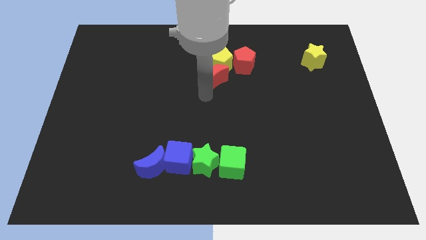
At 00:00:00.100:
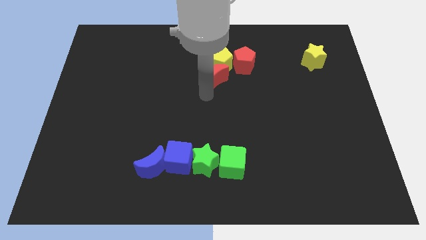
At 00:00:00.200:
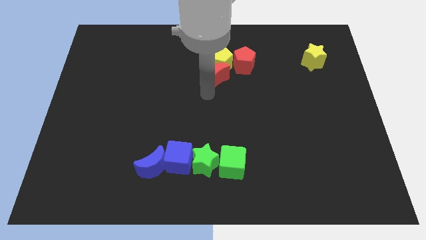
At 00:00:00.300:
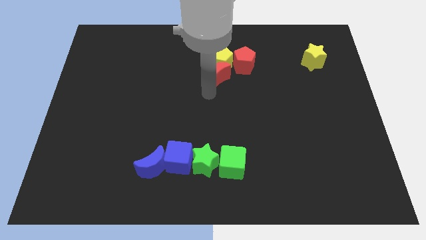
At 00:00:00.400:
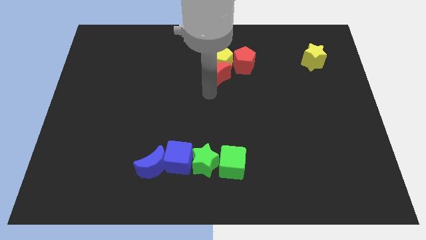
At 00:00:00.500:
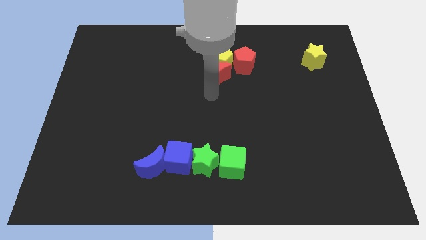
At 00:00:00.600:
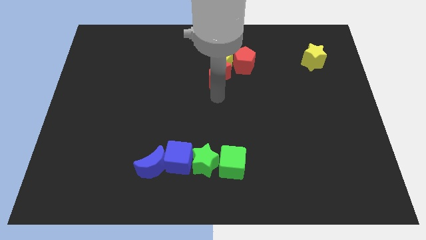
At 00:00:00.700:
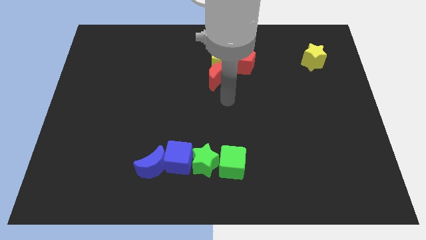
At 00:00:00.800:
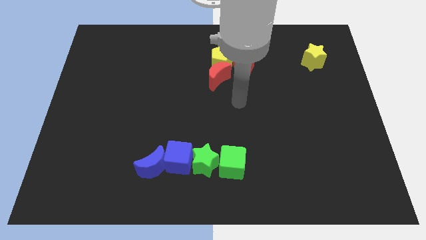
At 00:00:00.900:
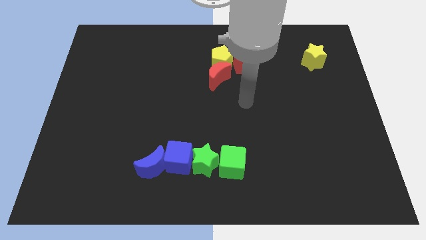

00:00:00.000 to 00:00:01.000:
slightly push the red crescent into the yellow pentagon

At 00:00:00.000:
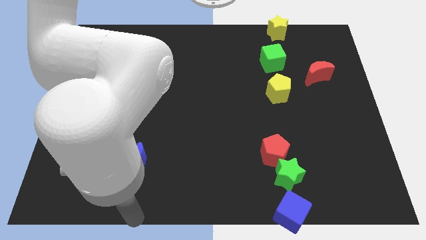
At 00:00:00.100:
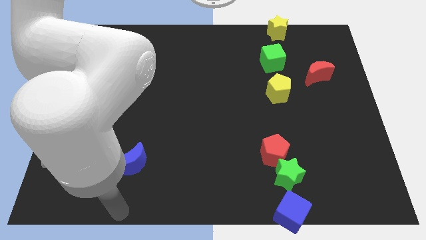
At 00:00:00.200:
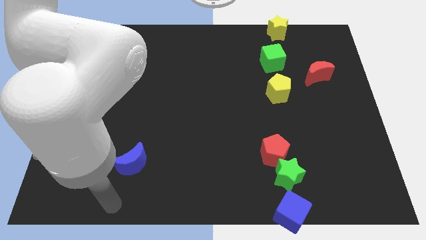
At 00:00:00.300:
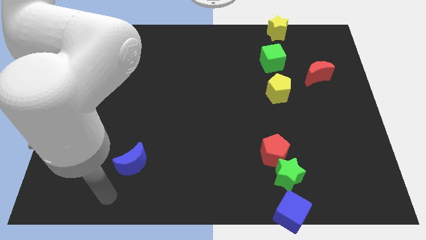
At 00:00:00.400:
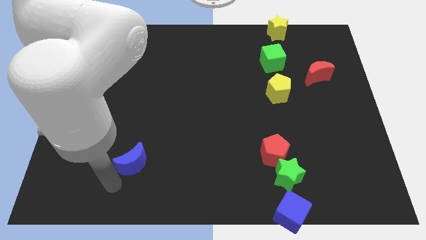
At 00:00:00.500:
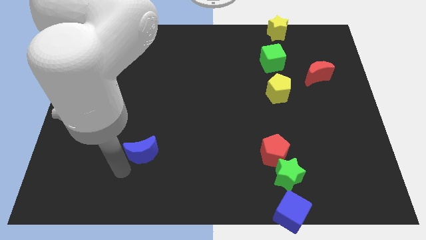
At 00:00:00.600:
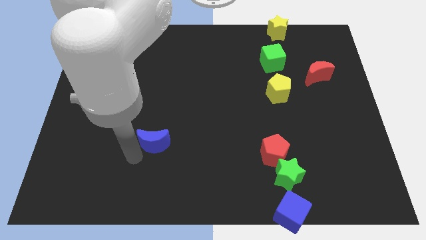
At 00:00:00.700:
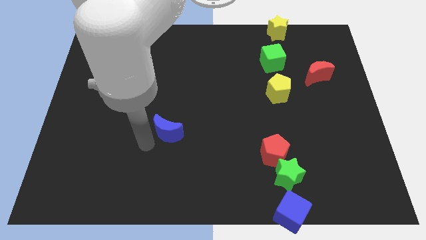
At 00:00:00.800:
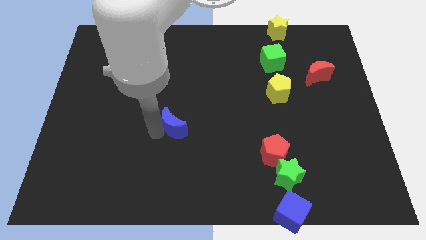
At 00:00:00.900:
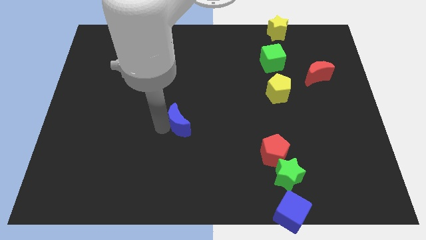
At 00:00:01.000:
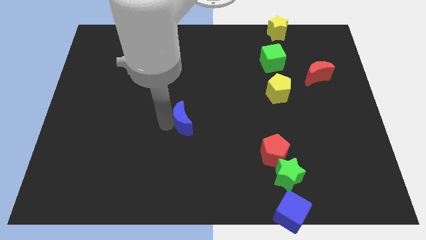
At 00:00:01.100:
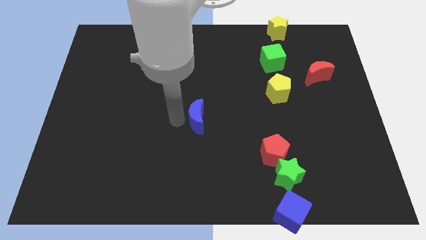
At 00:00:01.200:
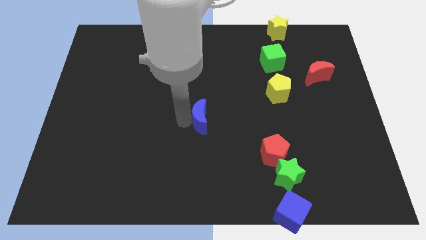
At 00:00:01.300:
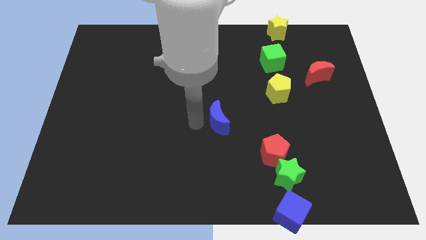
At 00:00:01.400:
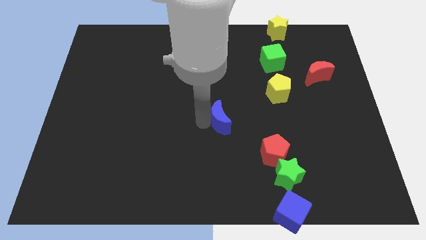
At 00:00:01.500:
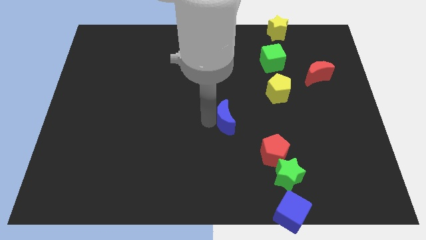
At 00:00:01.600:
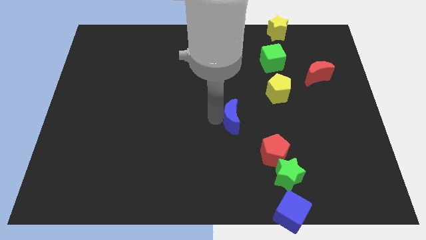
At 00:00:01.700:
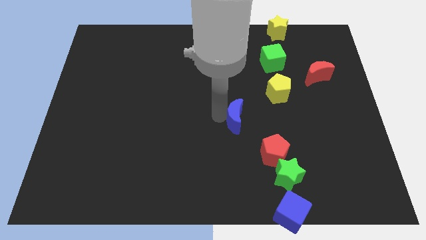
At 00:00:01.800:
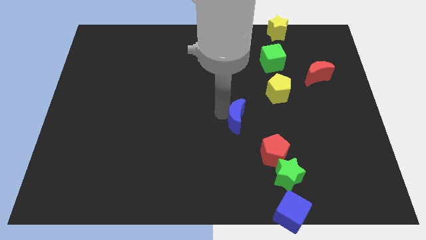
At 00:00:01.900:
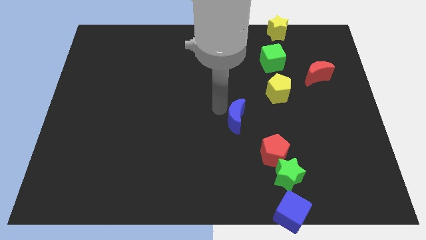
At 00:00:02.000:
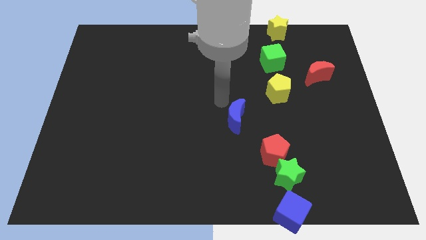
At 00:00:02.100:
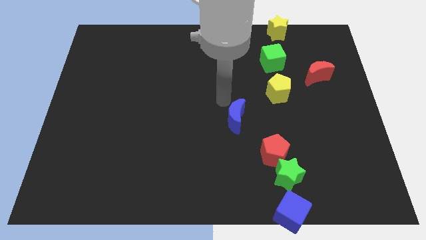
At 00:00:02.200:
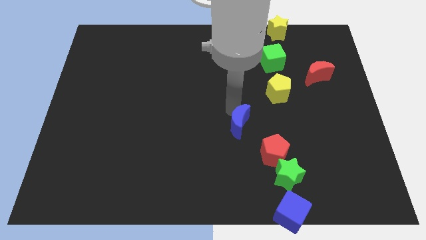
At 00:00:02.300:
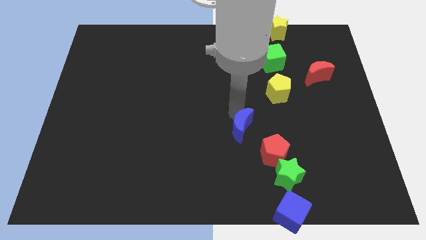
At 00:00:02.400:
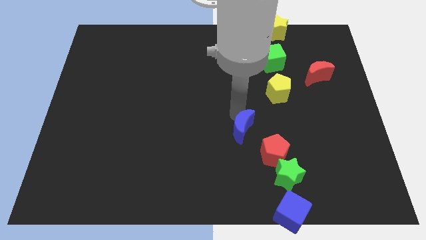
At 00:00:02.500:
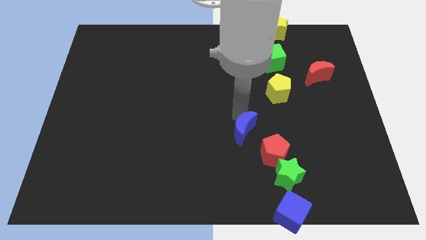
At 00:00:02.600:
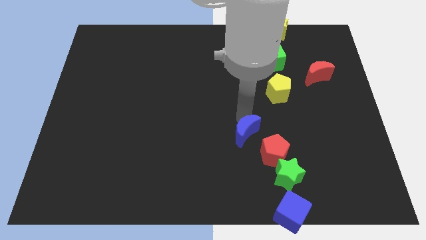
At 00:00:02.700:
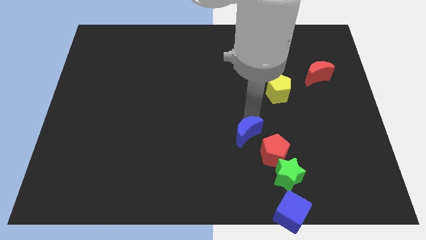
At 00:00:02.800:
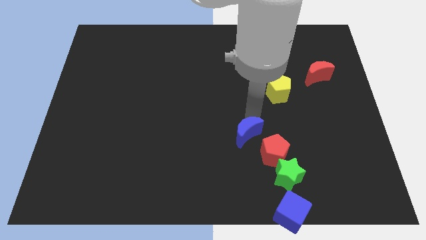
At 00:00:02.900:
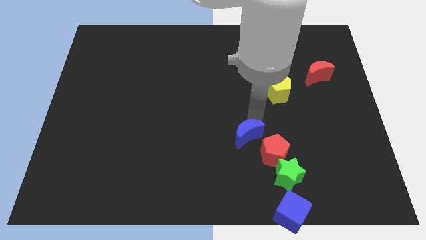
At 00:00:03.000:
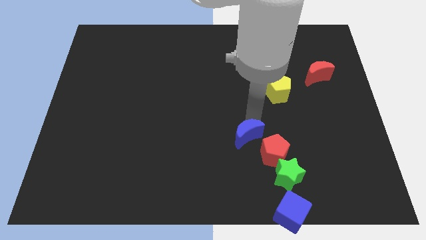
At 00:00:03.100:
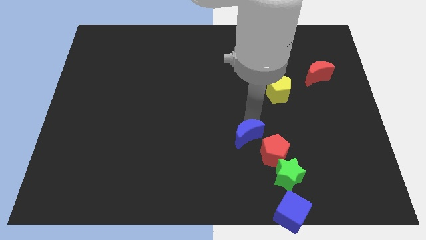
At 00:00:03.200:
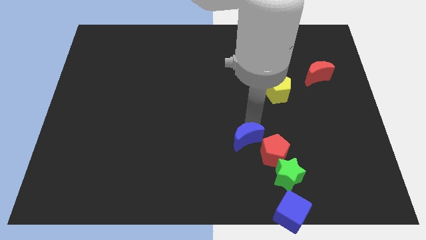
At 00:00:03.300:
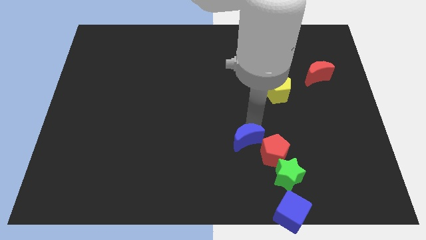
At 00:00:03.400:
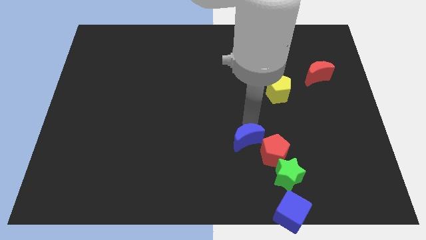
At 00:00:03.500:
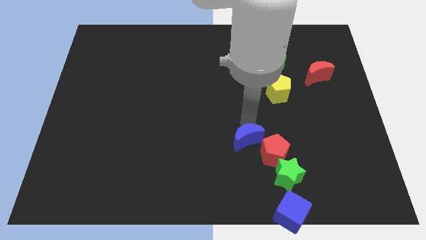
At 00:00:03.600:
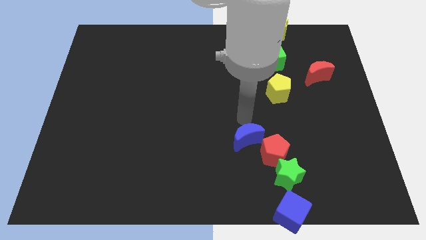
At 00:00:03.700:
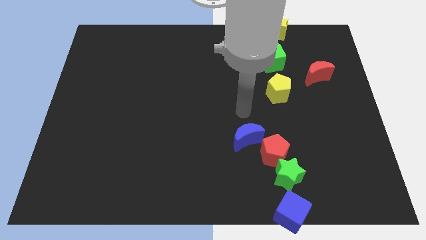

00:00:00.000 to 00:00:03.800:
take the blue crescent close to the red pentagon

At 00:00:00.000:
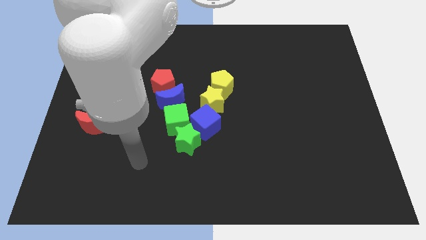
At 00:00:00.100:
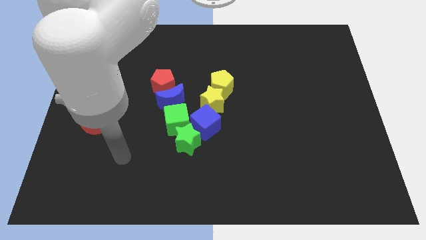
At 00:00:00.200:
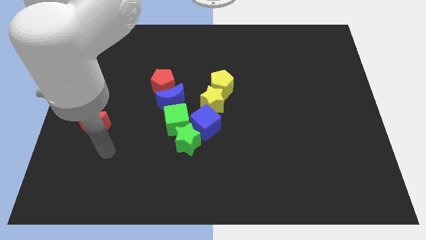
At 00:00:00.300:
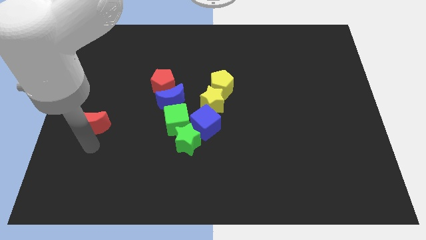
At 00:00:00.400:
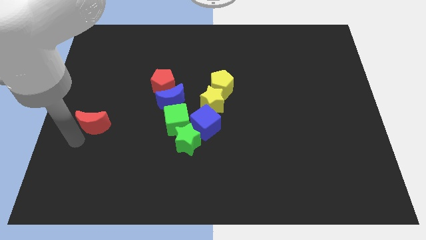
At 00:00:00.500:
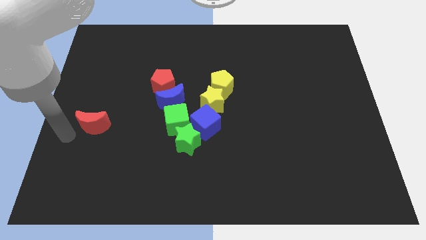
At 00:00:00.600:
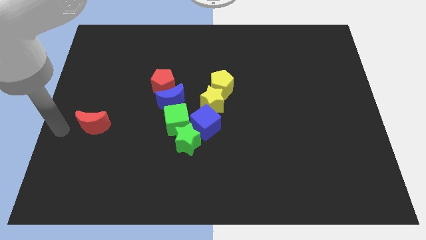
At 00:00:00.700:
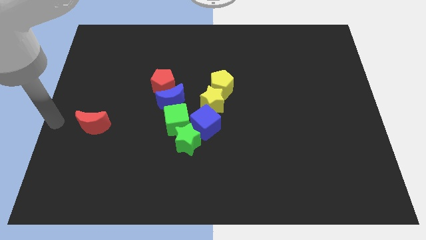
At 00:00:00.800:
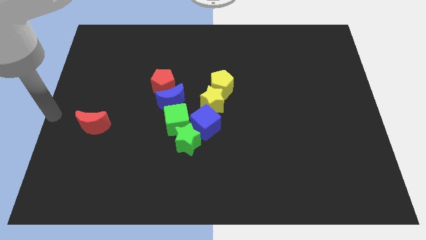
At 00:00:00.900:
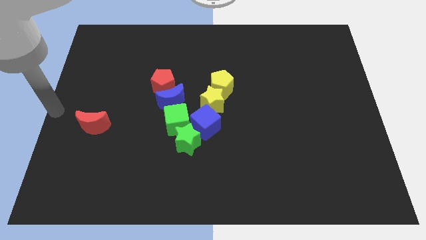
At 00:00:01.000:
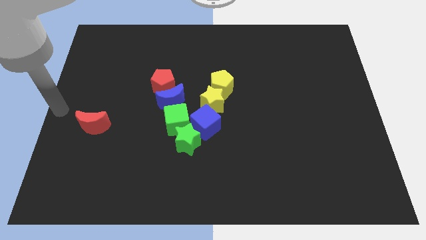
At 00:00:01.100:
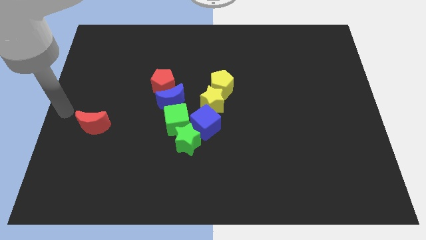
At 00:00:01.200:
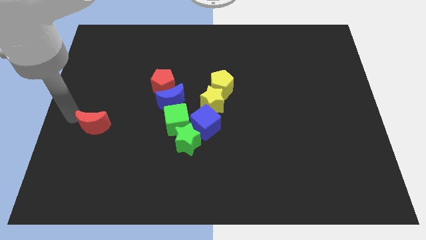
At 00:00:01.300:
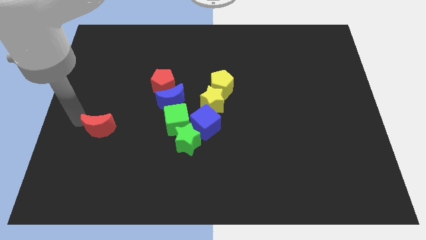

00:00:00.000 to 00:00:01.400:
move your arm to the red moon

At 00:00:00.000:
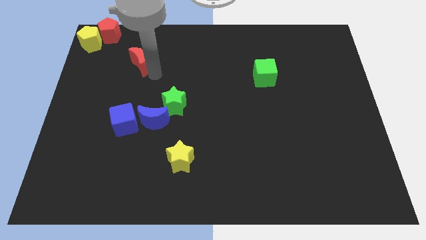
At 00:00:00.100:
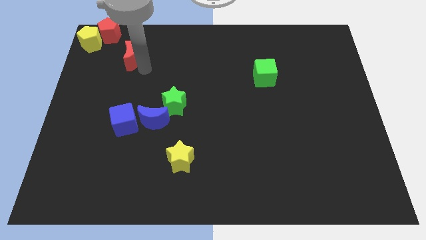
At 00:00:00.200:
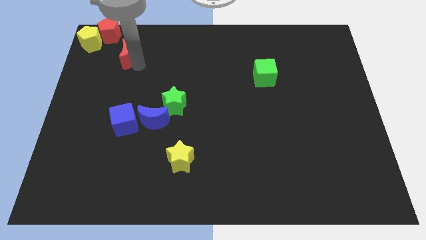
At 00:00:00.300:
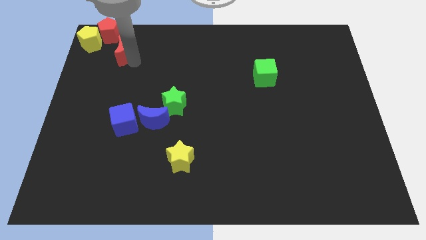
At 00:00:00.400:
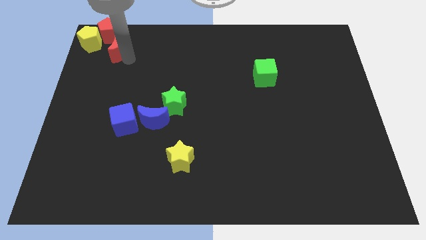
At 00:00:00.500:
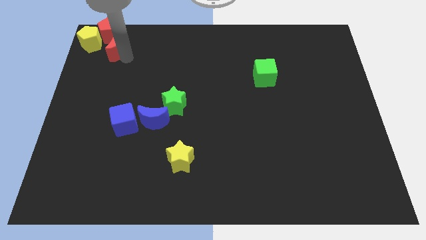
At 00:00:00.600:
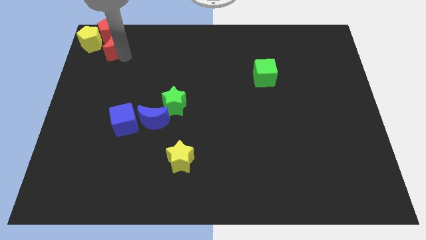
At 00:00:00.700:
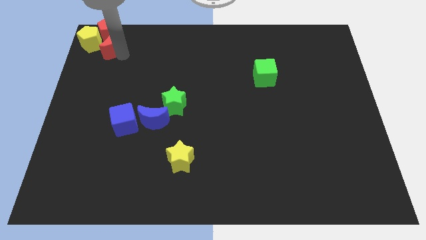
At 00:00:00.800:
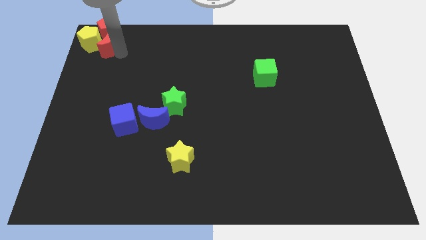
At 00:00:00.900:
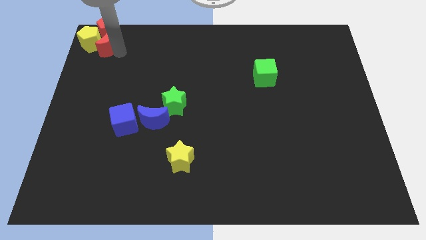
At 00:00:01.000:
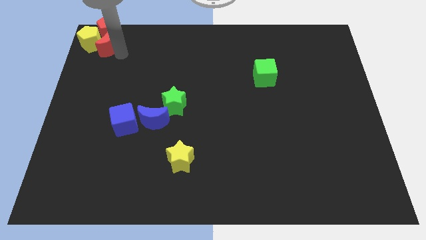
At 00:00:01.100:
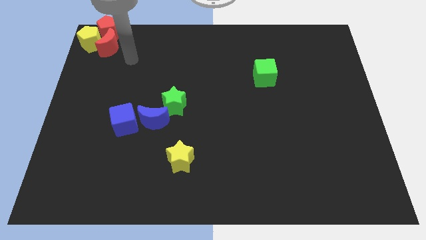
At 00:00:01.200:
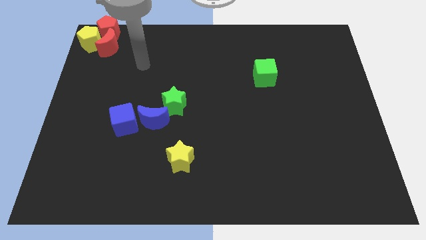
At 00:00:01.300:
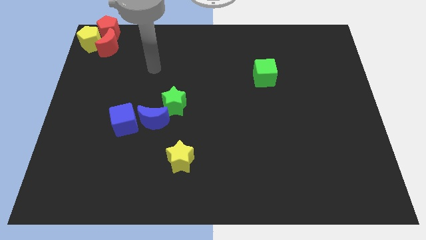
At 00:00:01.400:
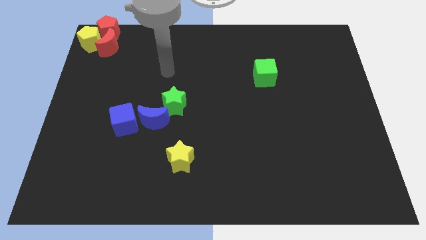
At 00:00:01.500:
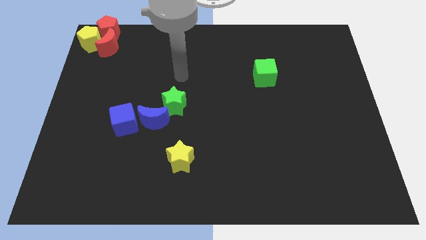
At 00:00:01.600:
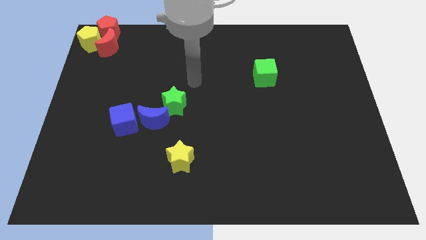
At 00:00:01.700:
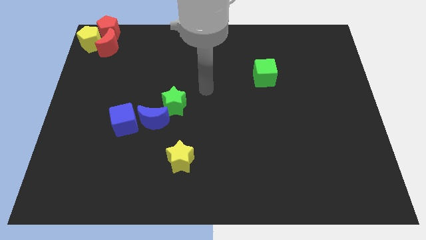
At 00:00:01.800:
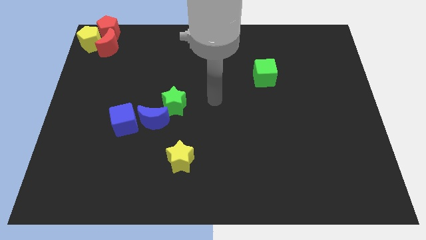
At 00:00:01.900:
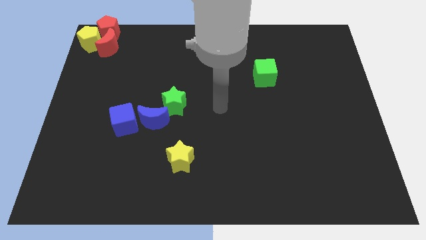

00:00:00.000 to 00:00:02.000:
push the red crescent into the red and yellow pentagons

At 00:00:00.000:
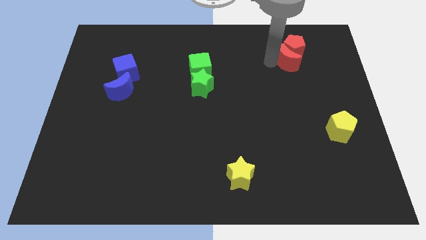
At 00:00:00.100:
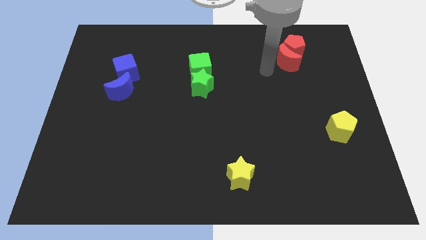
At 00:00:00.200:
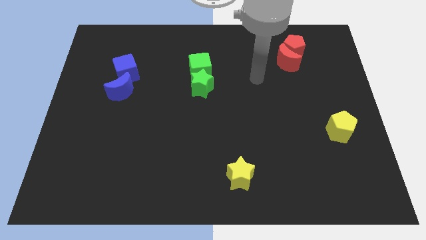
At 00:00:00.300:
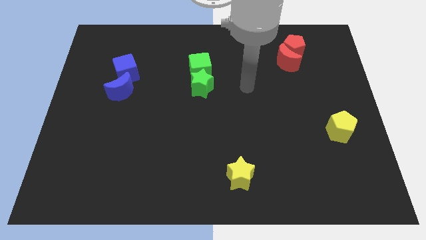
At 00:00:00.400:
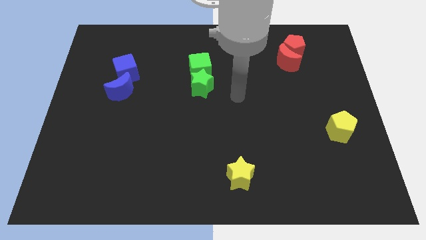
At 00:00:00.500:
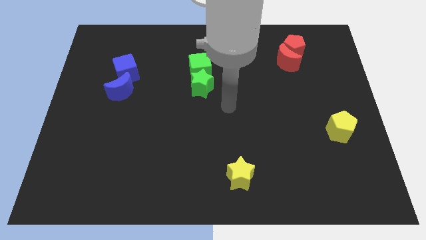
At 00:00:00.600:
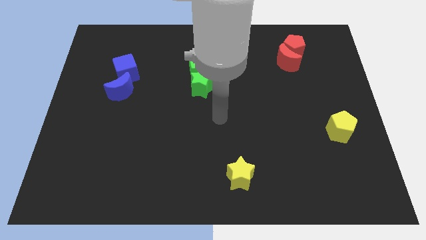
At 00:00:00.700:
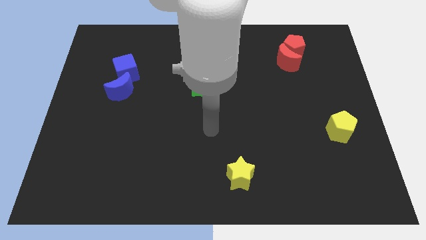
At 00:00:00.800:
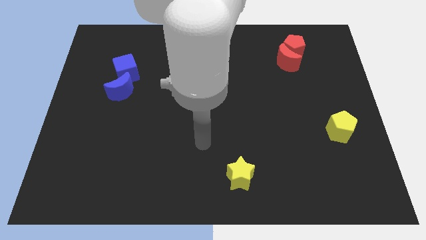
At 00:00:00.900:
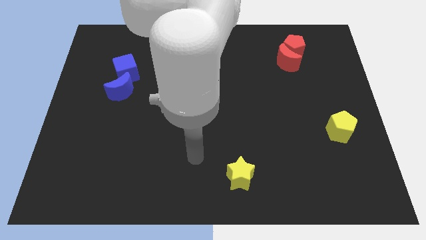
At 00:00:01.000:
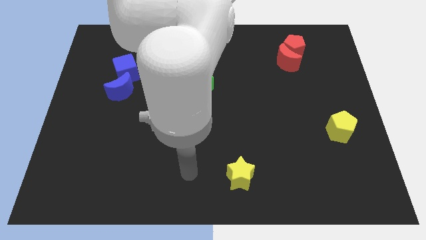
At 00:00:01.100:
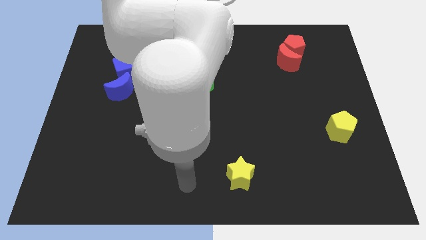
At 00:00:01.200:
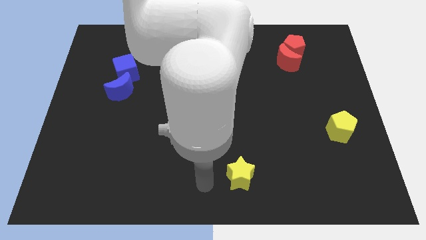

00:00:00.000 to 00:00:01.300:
move your arm away from red moon
